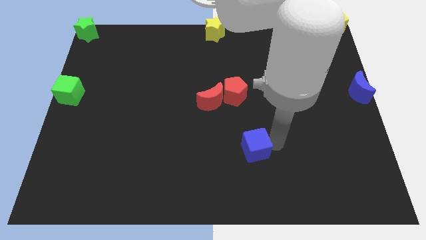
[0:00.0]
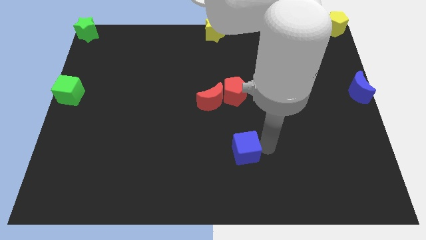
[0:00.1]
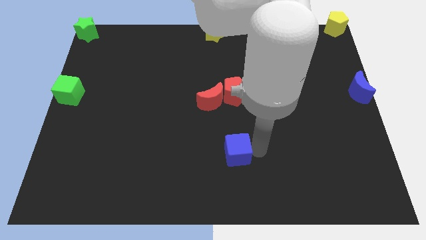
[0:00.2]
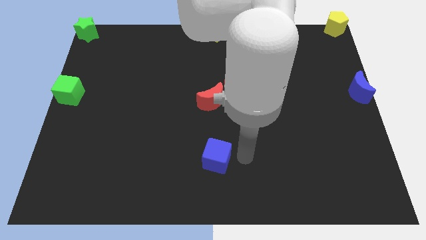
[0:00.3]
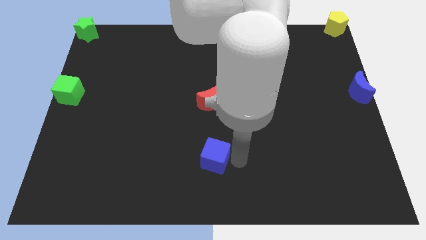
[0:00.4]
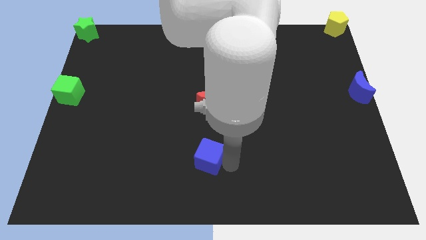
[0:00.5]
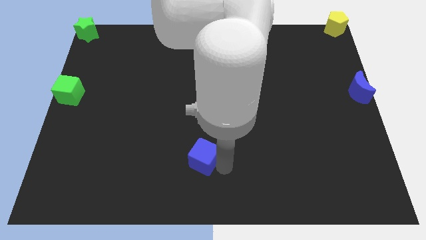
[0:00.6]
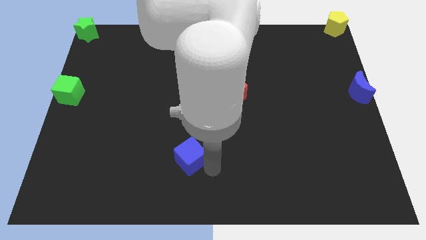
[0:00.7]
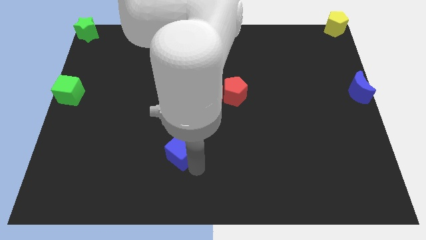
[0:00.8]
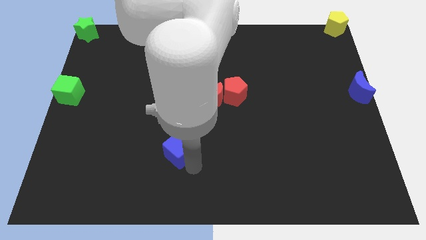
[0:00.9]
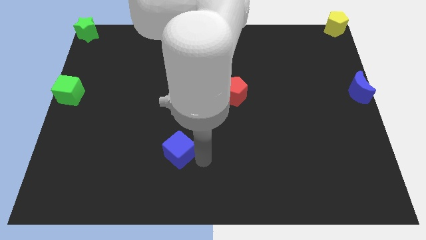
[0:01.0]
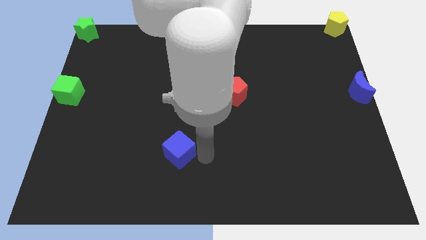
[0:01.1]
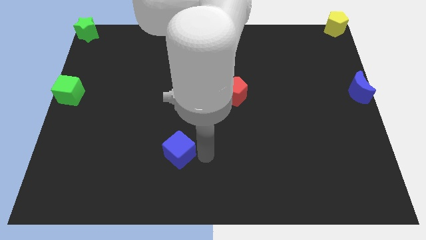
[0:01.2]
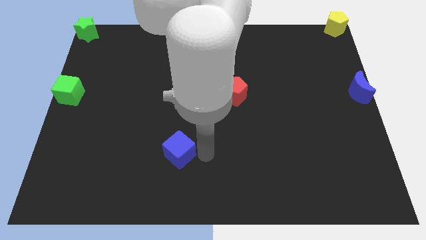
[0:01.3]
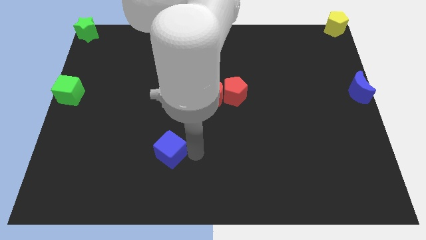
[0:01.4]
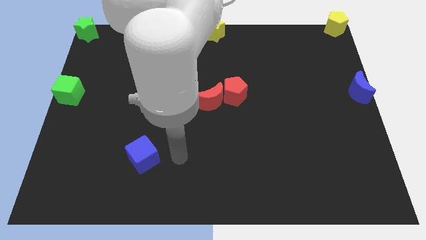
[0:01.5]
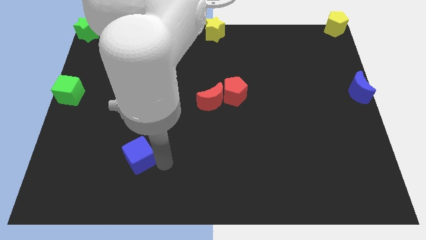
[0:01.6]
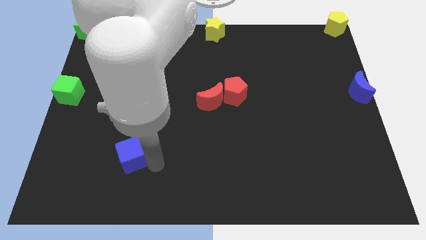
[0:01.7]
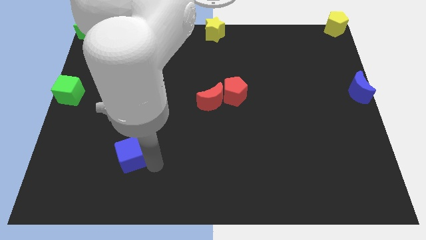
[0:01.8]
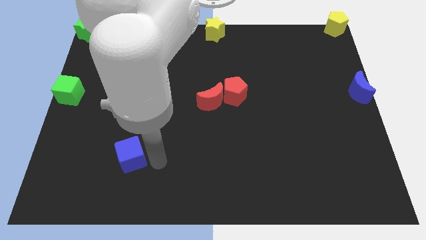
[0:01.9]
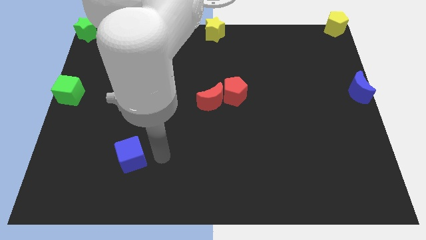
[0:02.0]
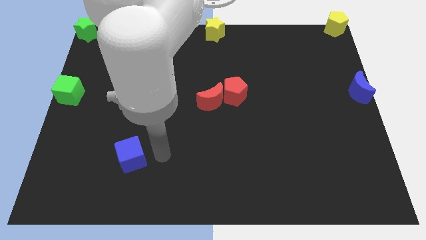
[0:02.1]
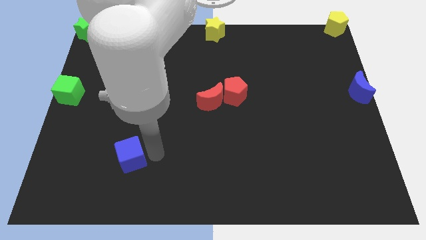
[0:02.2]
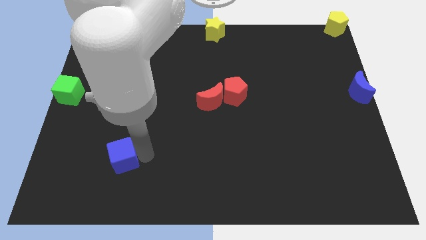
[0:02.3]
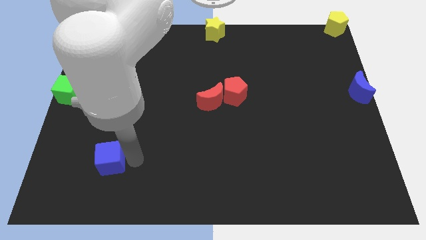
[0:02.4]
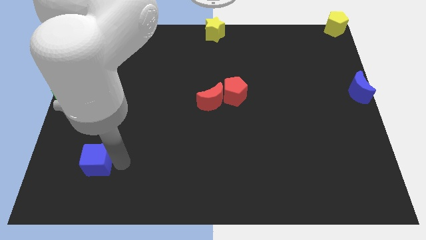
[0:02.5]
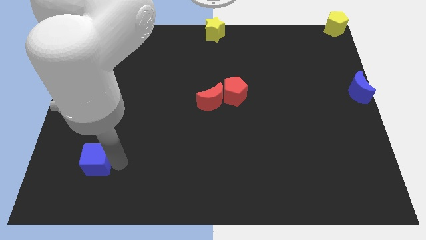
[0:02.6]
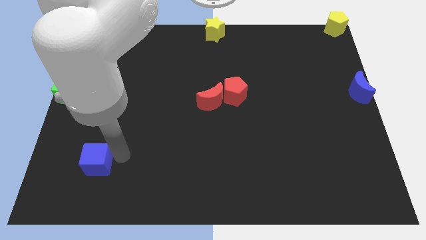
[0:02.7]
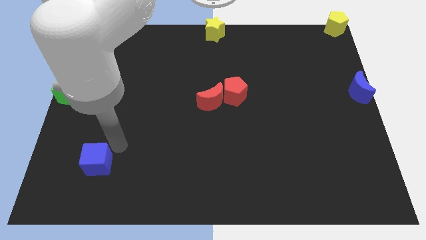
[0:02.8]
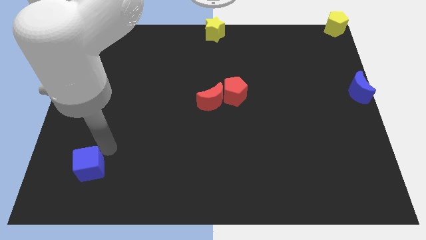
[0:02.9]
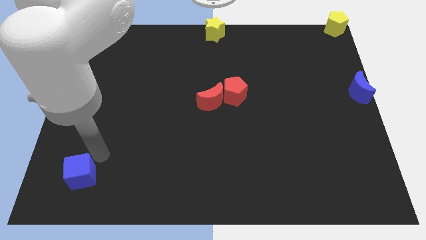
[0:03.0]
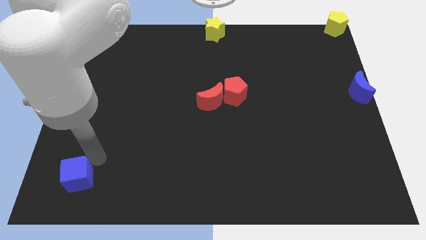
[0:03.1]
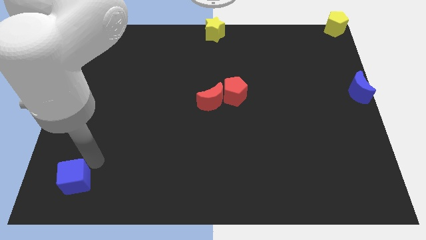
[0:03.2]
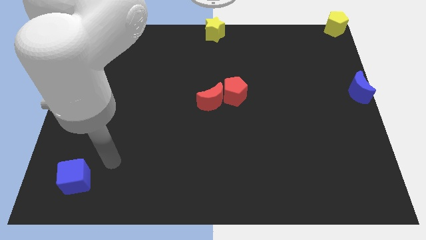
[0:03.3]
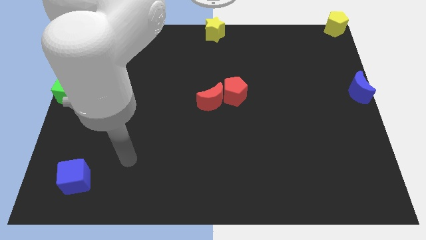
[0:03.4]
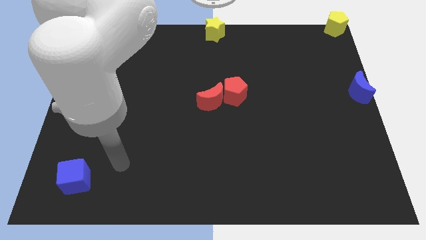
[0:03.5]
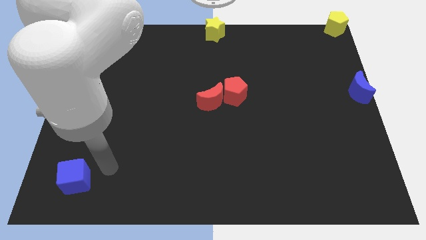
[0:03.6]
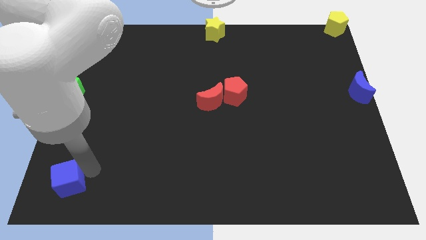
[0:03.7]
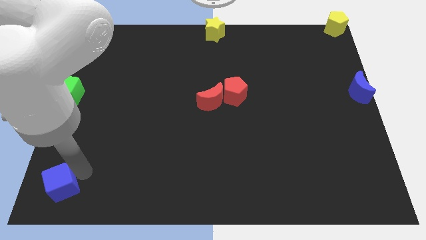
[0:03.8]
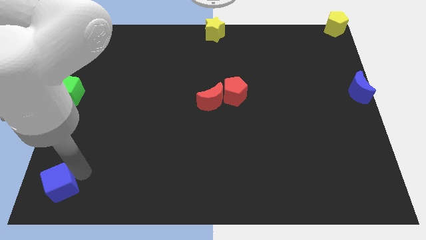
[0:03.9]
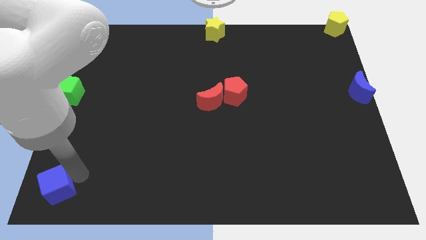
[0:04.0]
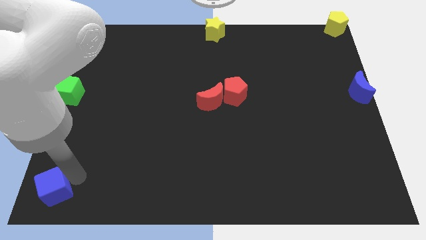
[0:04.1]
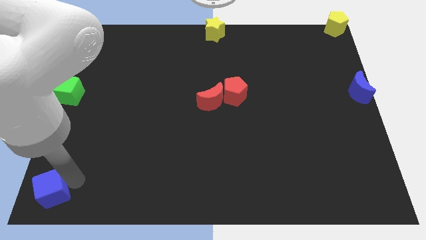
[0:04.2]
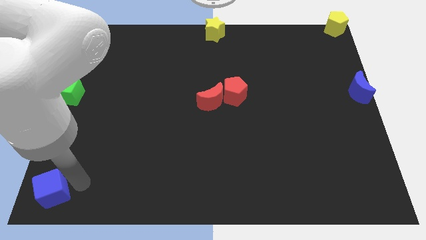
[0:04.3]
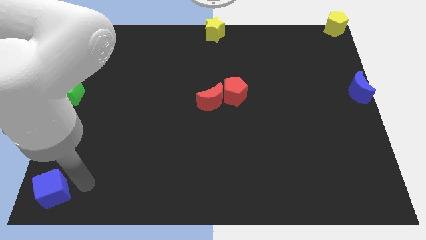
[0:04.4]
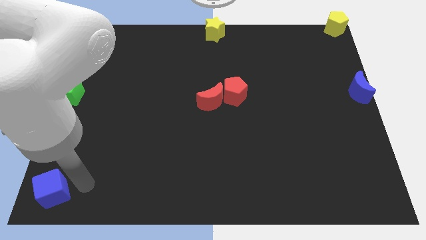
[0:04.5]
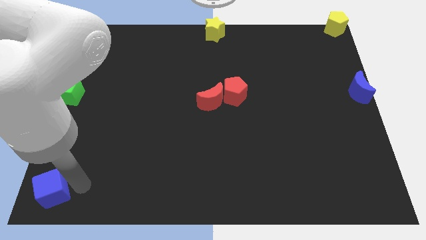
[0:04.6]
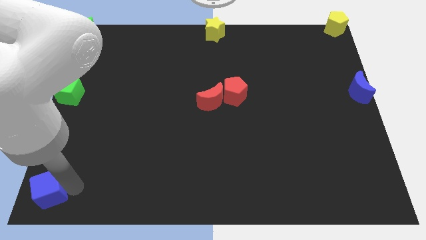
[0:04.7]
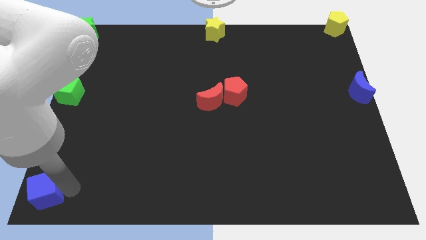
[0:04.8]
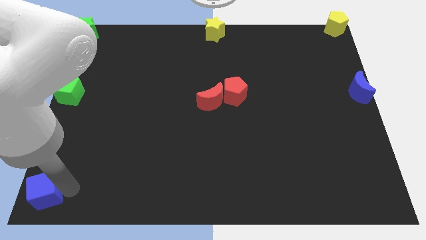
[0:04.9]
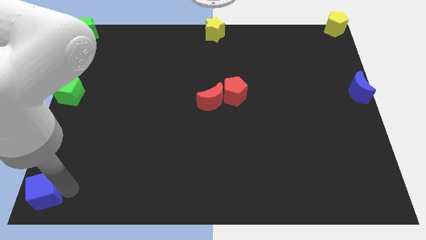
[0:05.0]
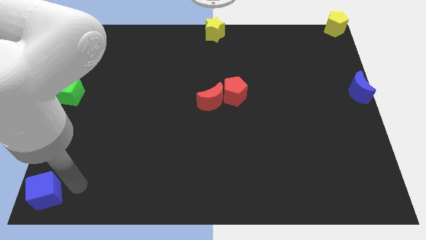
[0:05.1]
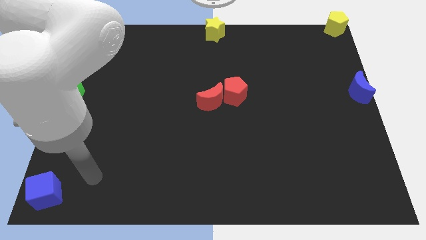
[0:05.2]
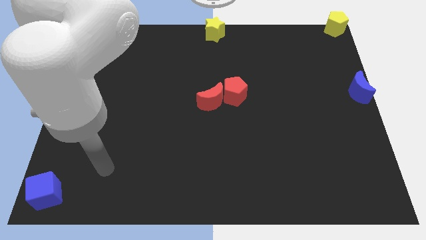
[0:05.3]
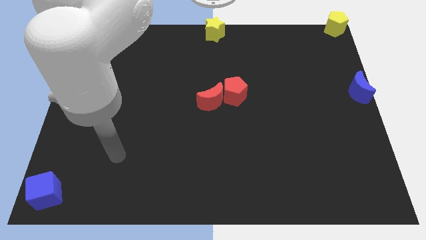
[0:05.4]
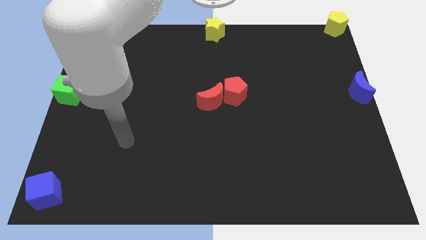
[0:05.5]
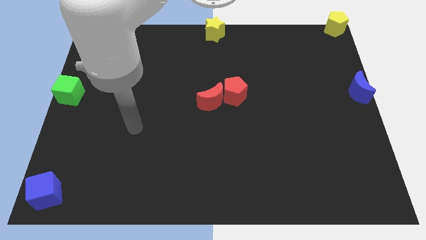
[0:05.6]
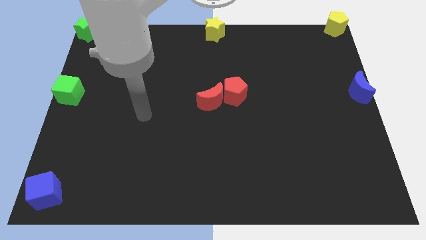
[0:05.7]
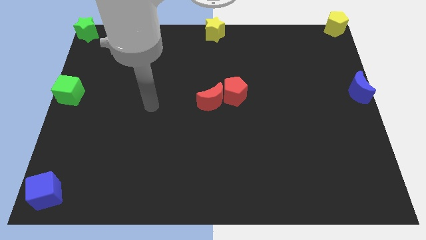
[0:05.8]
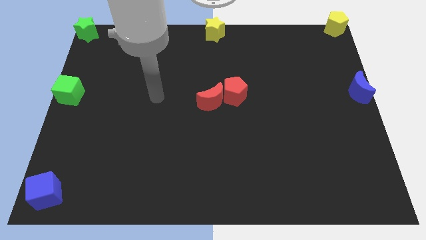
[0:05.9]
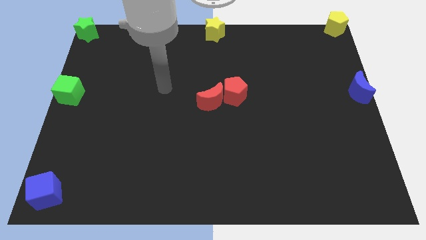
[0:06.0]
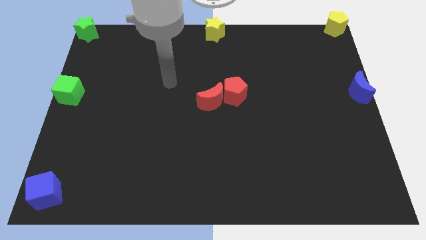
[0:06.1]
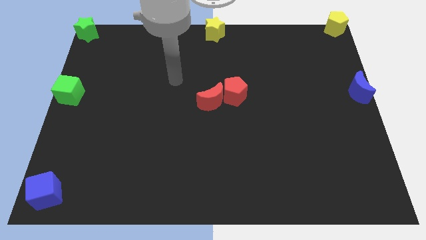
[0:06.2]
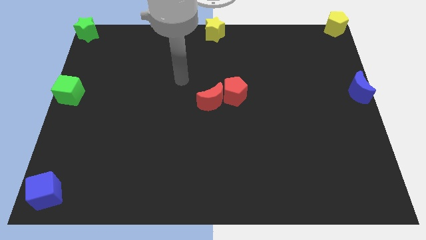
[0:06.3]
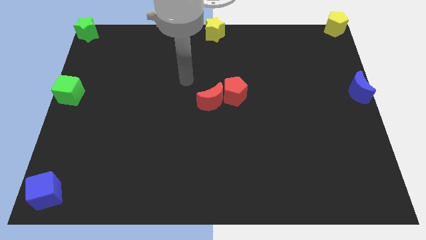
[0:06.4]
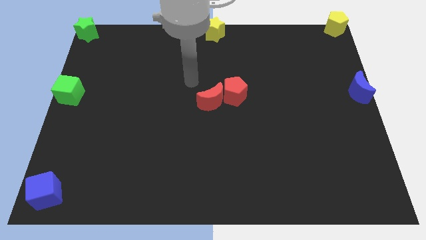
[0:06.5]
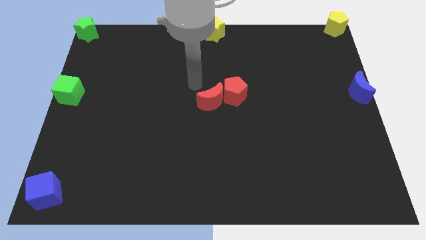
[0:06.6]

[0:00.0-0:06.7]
push blue cube to bottom left corner

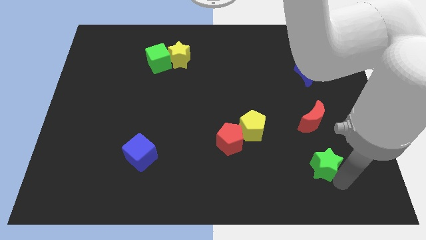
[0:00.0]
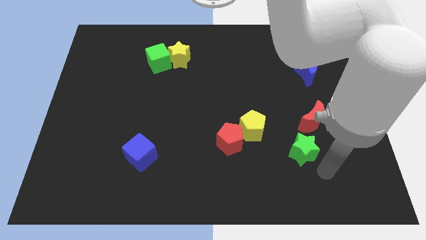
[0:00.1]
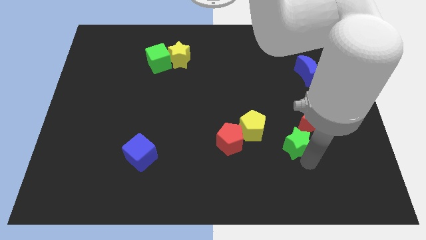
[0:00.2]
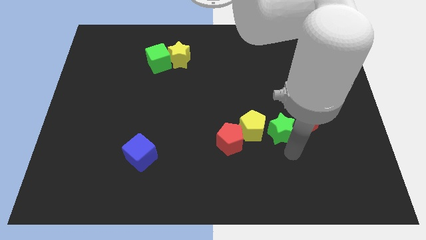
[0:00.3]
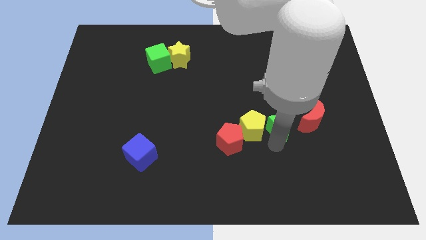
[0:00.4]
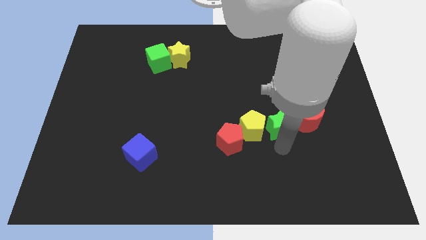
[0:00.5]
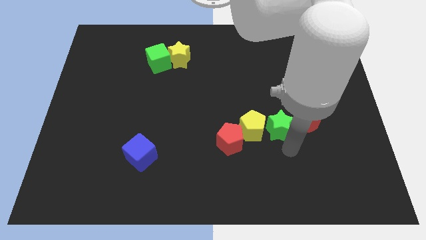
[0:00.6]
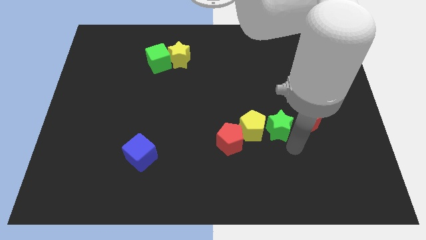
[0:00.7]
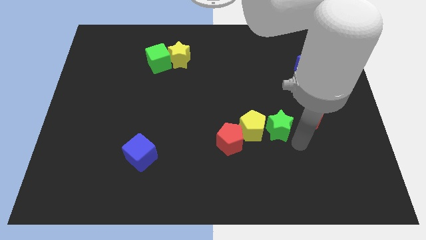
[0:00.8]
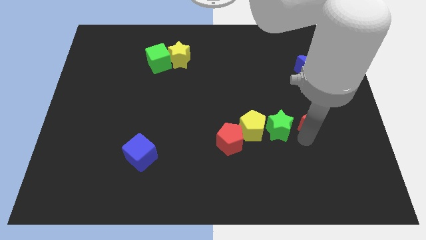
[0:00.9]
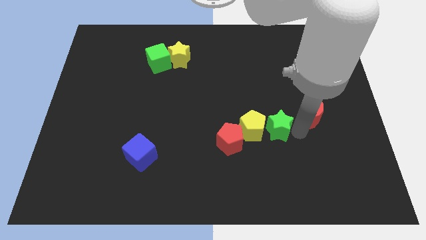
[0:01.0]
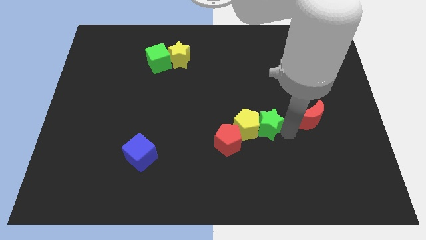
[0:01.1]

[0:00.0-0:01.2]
place the green star to the right of the yellow pentagon

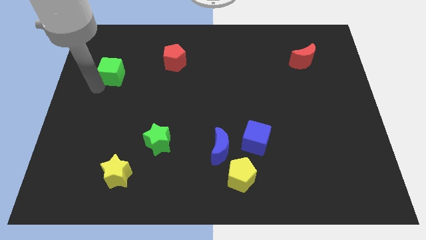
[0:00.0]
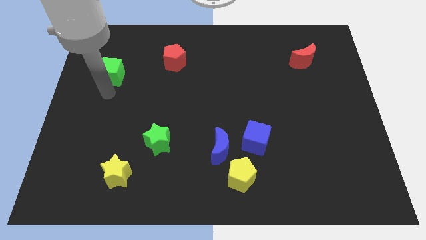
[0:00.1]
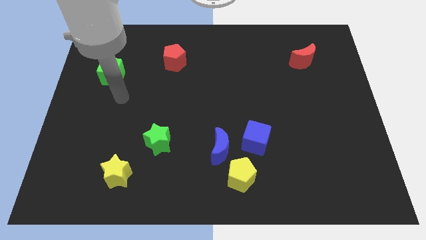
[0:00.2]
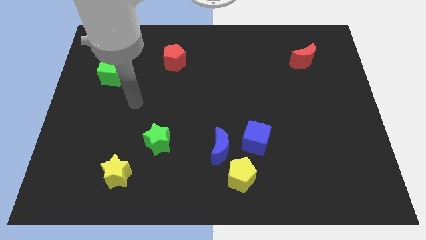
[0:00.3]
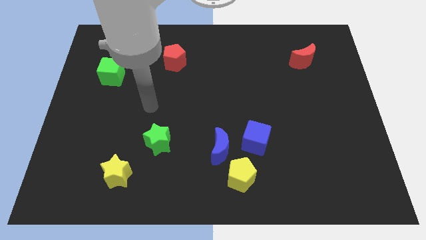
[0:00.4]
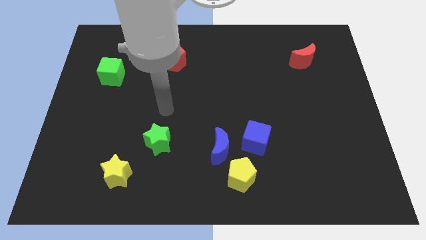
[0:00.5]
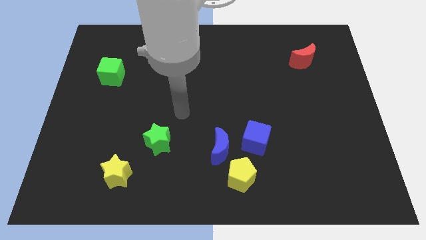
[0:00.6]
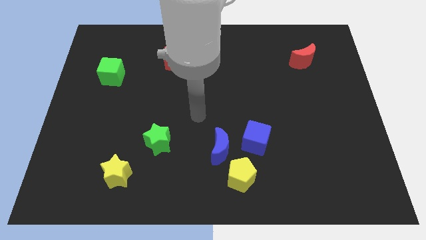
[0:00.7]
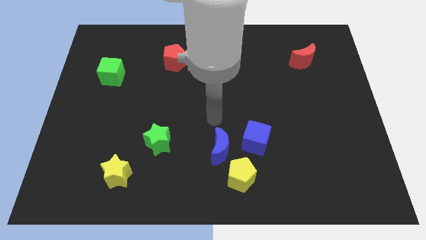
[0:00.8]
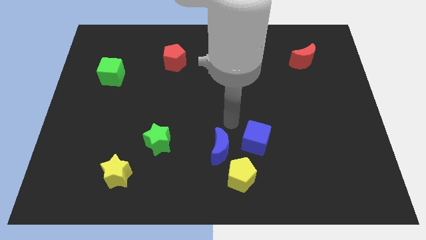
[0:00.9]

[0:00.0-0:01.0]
point the arm to the center of the board
